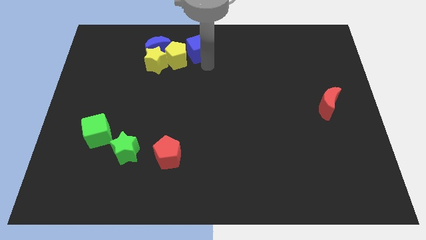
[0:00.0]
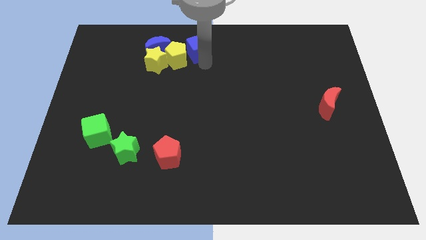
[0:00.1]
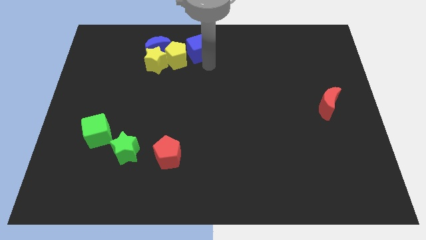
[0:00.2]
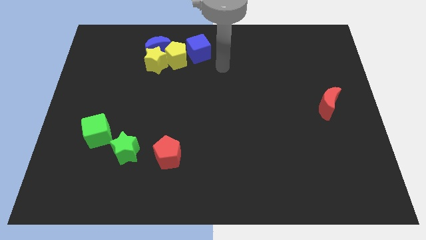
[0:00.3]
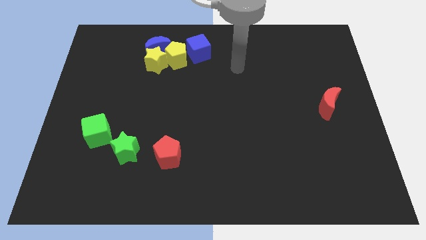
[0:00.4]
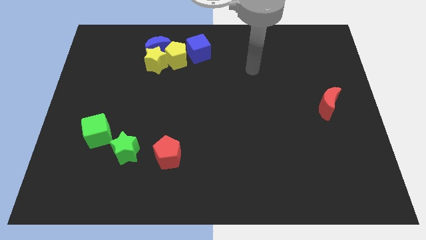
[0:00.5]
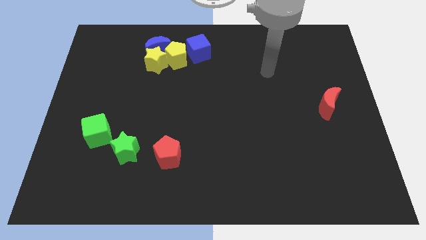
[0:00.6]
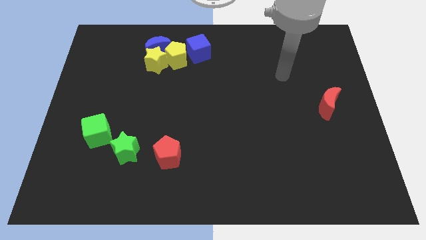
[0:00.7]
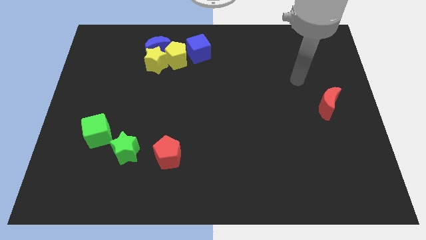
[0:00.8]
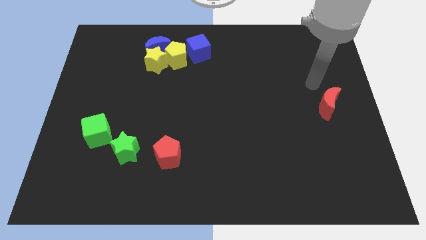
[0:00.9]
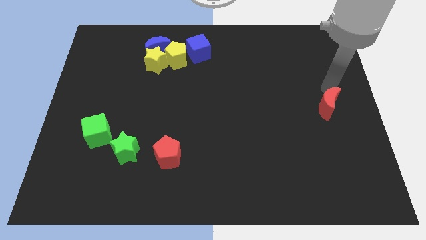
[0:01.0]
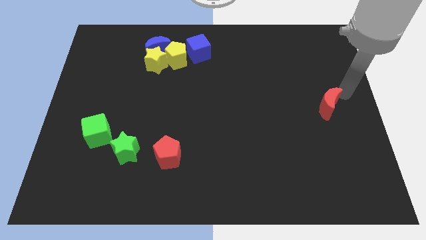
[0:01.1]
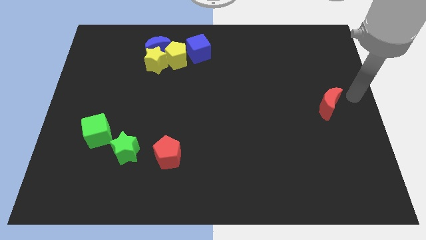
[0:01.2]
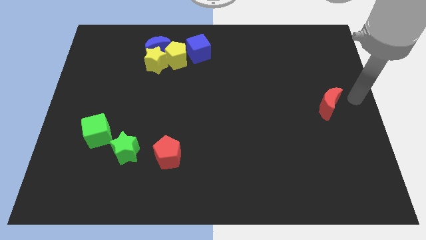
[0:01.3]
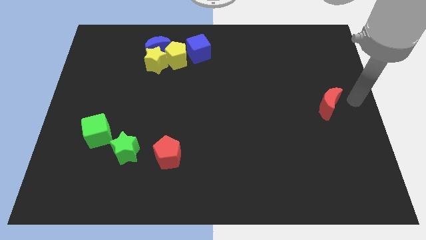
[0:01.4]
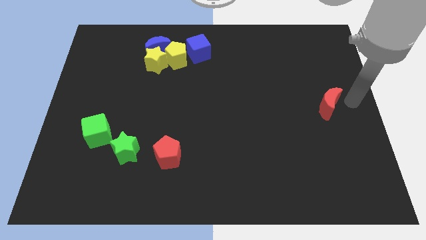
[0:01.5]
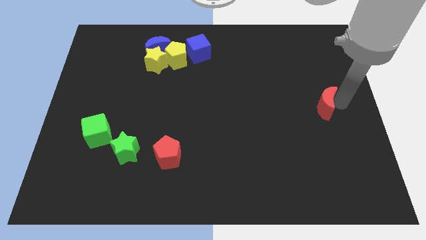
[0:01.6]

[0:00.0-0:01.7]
place the arm to the right of the red moon

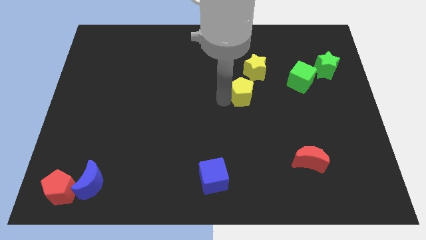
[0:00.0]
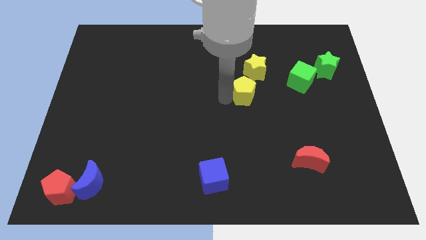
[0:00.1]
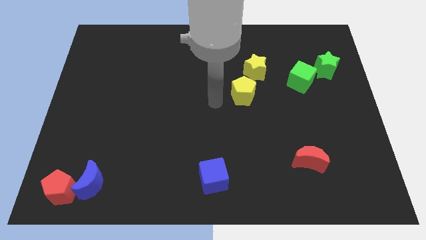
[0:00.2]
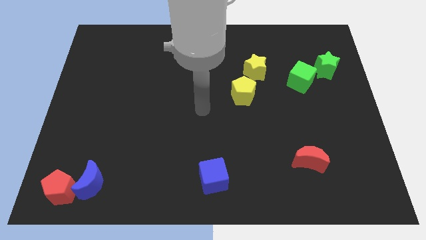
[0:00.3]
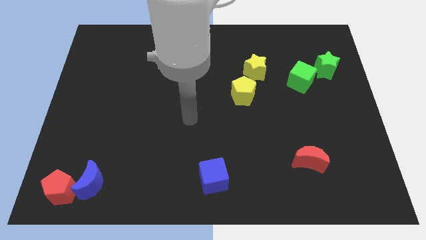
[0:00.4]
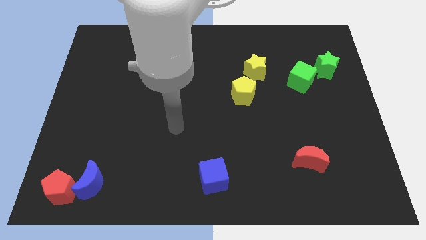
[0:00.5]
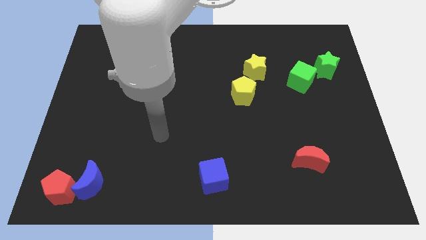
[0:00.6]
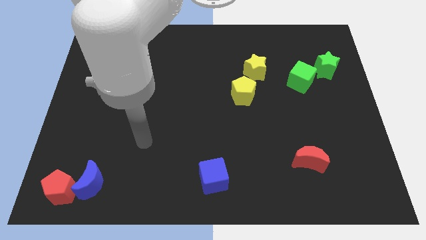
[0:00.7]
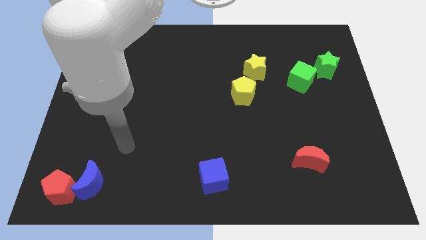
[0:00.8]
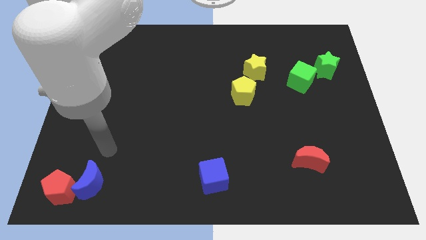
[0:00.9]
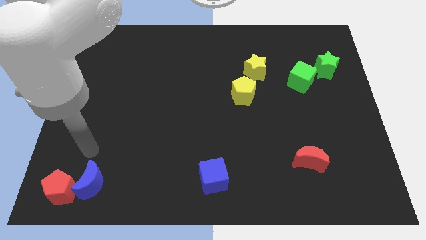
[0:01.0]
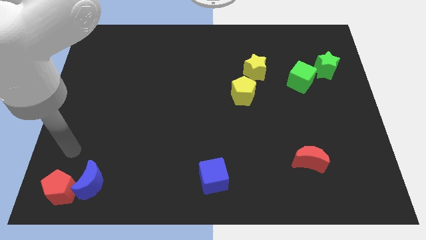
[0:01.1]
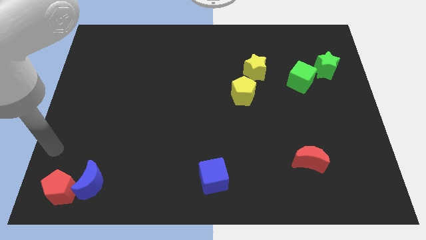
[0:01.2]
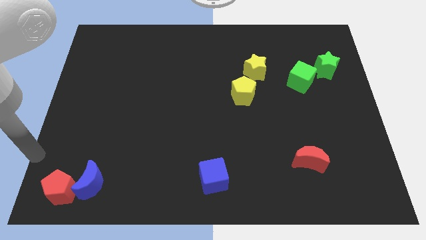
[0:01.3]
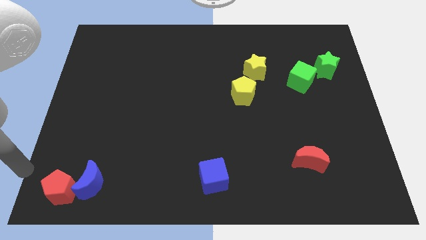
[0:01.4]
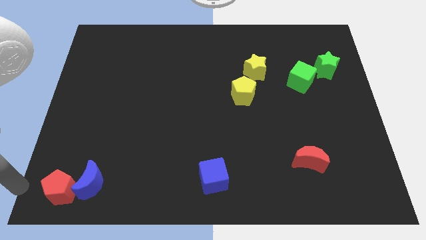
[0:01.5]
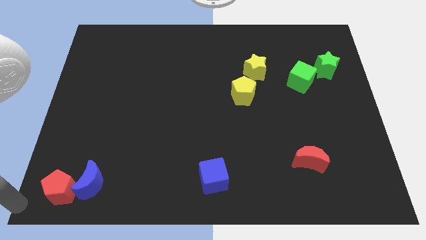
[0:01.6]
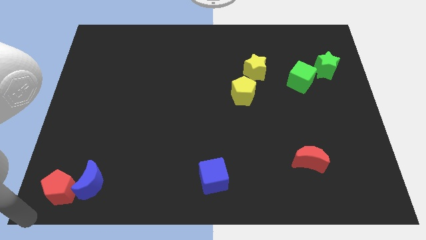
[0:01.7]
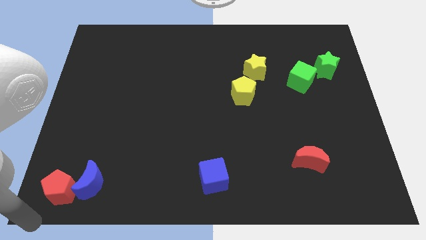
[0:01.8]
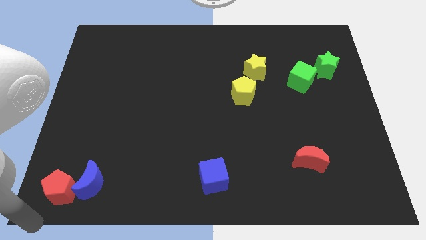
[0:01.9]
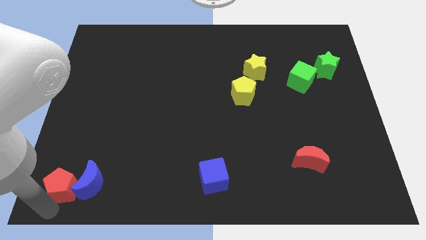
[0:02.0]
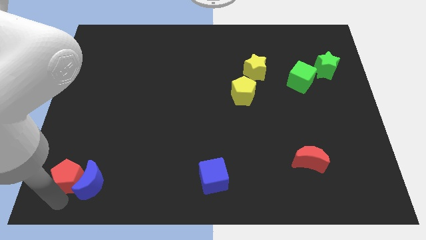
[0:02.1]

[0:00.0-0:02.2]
move arm near red pentagon

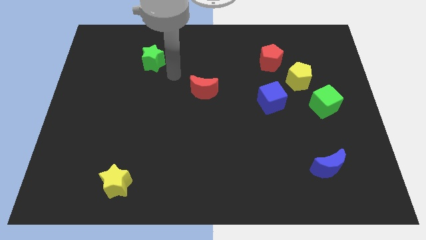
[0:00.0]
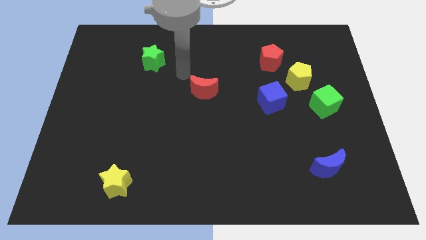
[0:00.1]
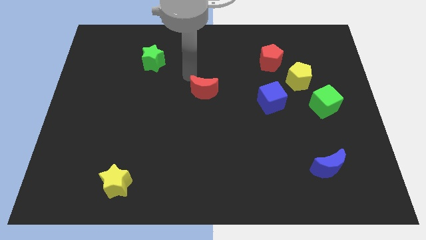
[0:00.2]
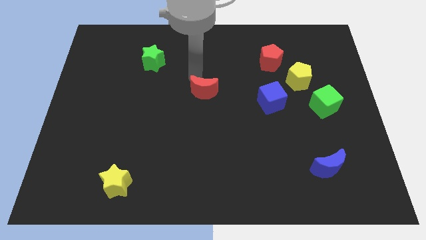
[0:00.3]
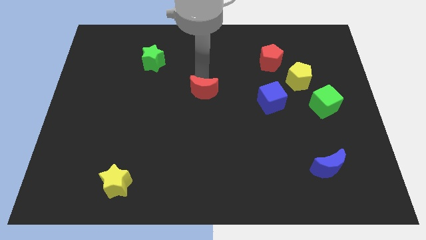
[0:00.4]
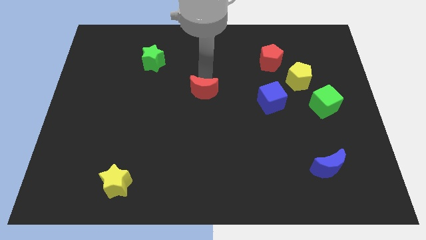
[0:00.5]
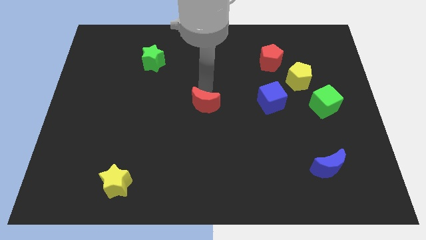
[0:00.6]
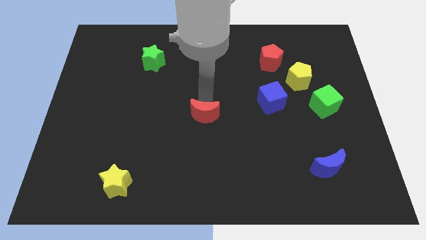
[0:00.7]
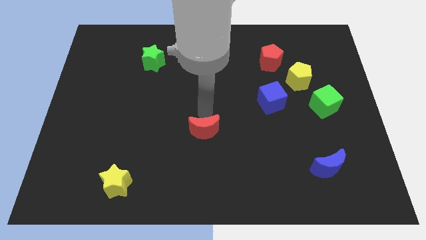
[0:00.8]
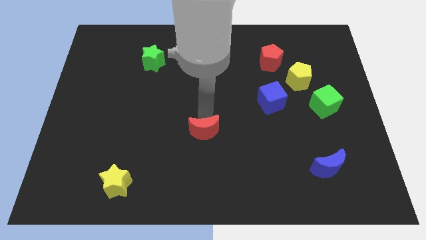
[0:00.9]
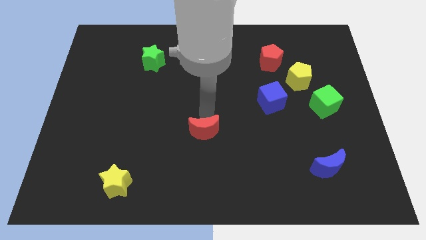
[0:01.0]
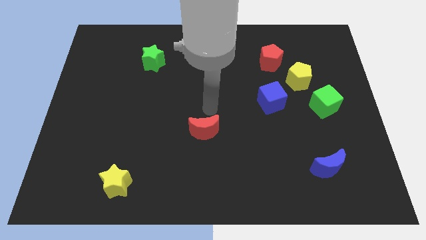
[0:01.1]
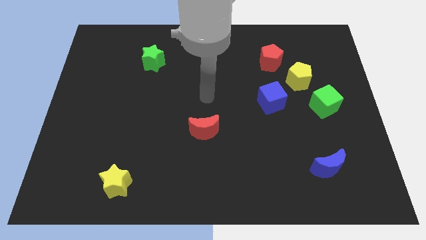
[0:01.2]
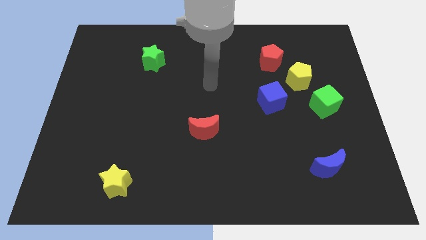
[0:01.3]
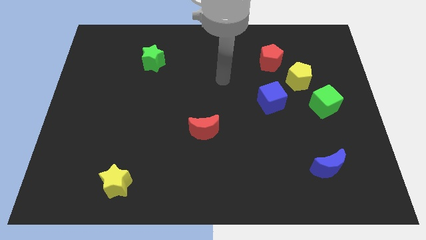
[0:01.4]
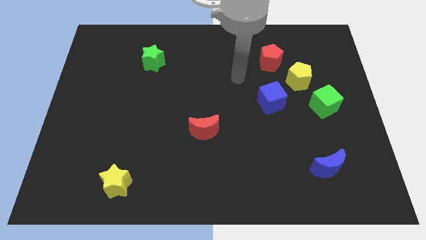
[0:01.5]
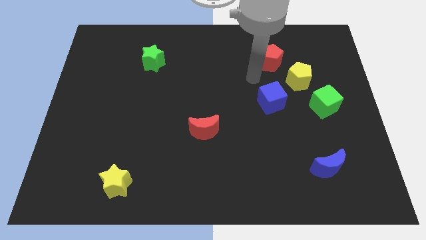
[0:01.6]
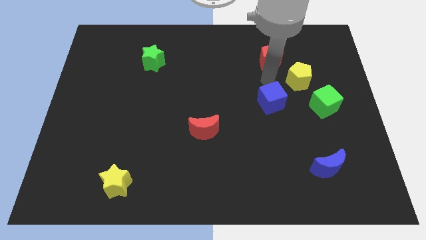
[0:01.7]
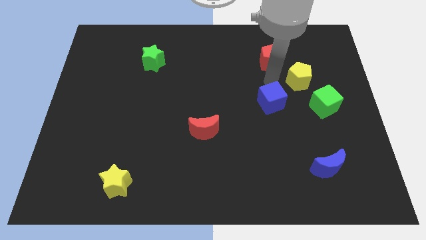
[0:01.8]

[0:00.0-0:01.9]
slide the red crescent to the center of the board

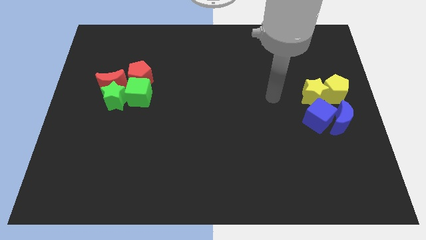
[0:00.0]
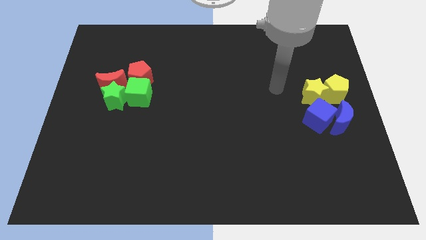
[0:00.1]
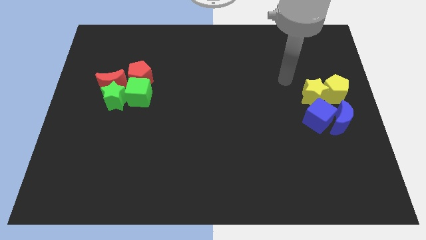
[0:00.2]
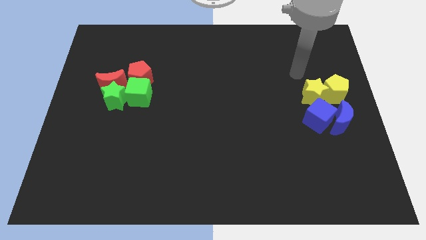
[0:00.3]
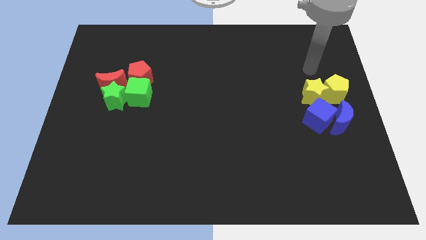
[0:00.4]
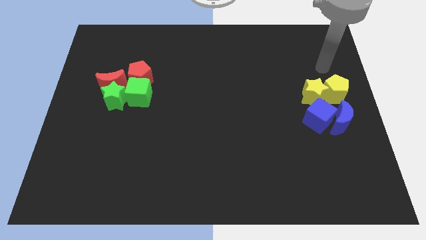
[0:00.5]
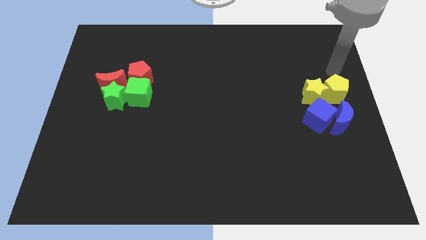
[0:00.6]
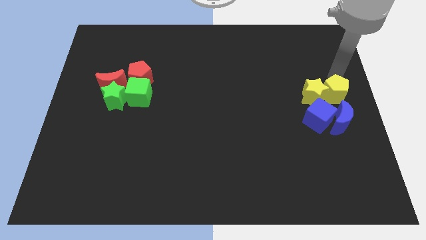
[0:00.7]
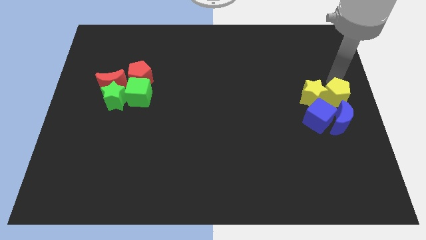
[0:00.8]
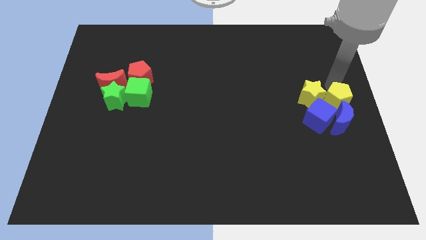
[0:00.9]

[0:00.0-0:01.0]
move your arm to the top of yellow pentagon

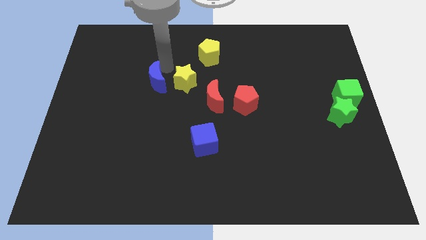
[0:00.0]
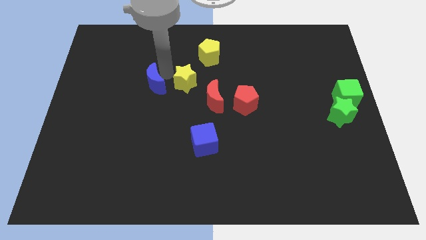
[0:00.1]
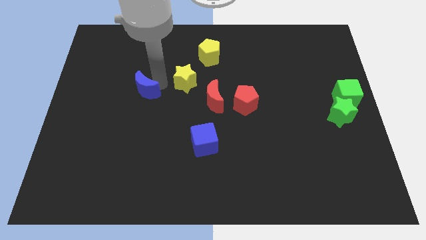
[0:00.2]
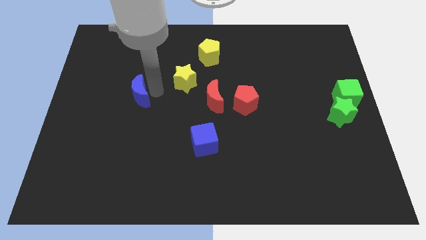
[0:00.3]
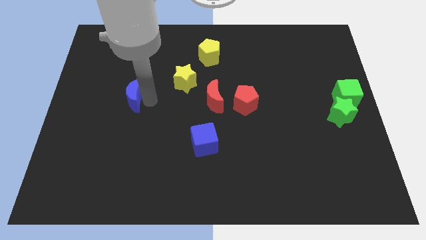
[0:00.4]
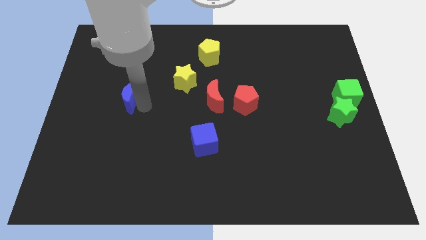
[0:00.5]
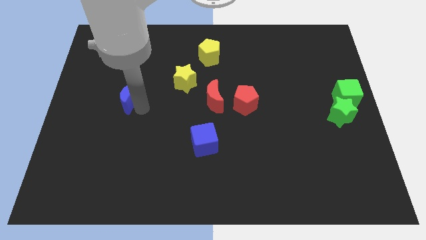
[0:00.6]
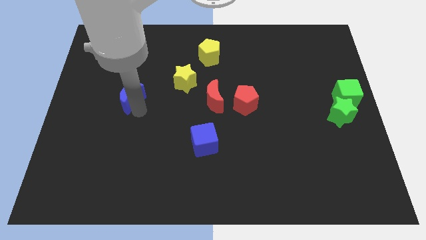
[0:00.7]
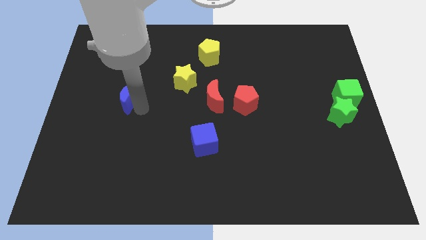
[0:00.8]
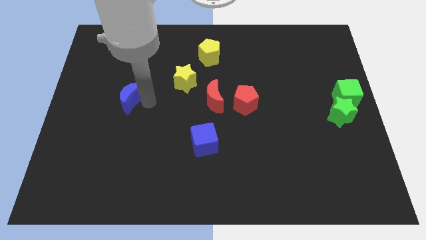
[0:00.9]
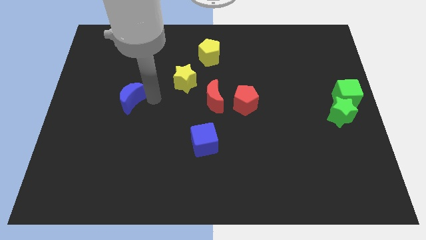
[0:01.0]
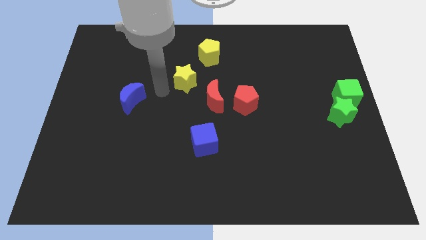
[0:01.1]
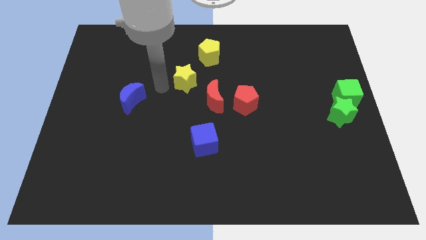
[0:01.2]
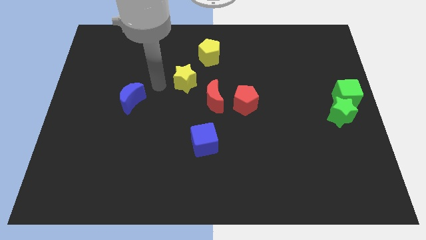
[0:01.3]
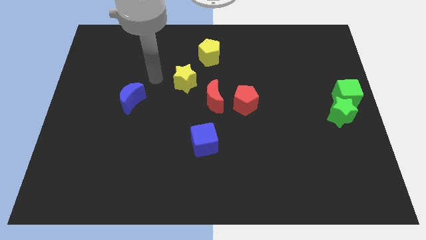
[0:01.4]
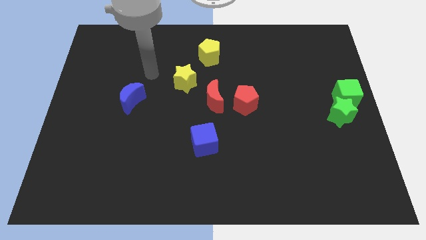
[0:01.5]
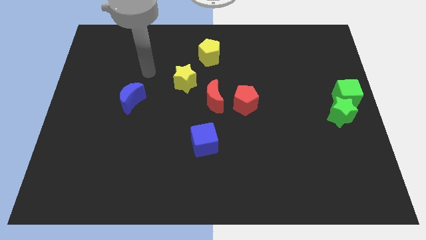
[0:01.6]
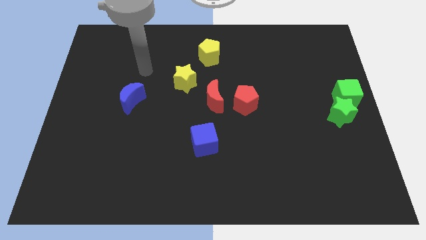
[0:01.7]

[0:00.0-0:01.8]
move the blue moon horizontally to the left of the red moon

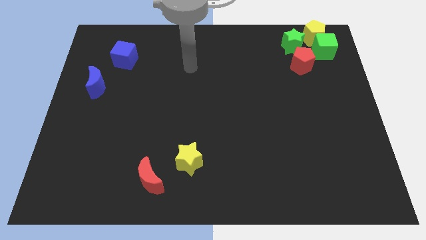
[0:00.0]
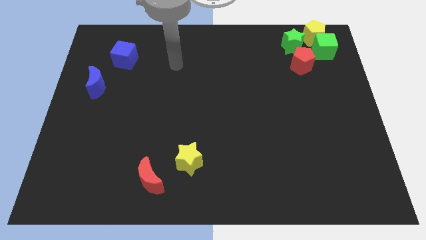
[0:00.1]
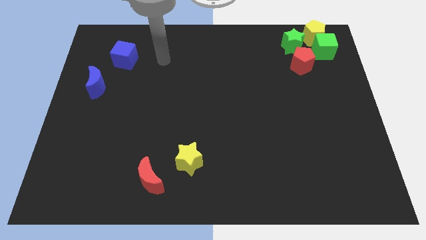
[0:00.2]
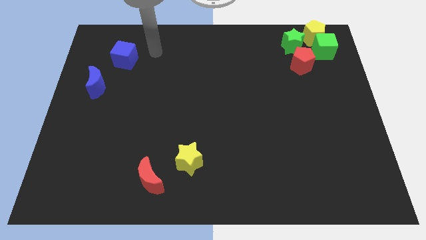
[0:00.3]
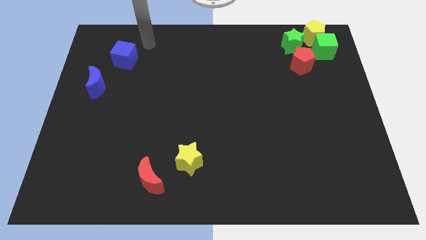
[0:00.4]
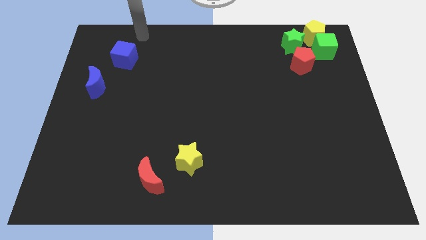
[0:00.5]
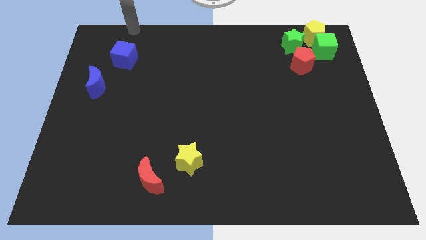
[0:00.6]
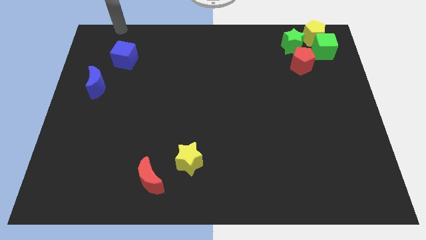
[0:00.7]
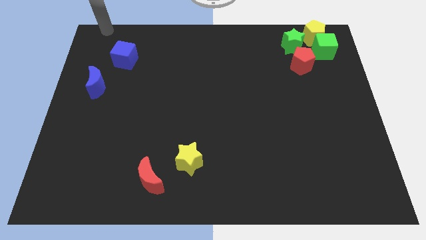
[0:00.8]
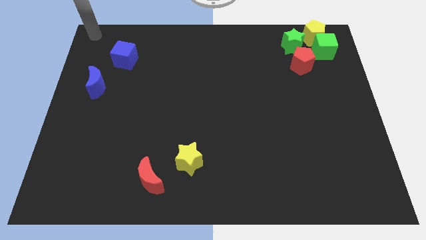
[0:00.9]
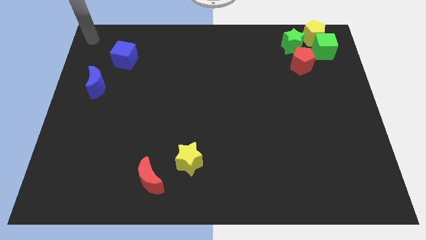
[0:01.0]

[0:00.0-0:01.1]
move your arm towards the top left of the board
